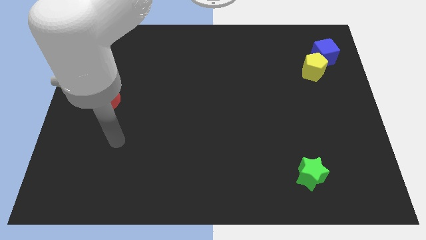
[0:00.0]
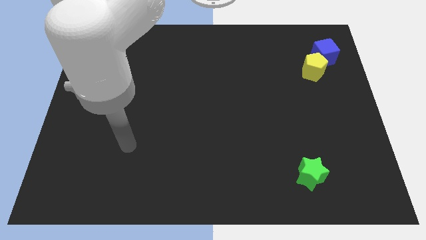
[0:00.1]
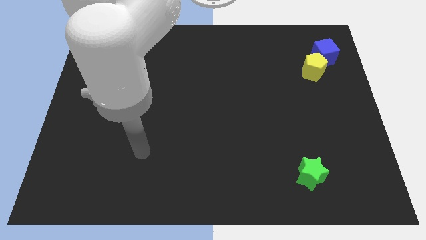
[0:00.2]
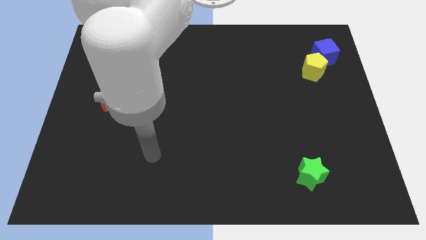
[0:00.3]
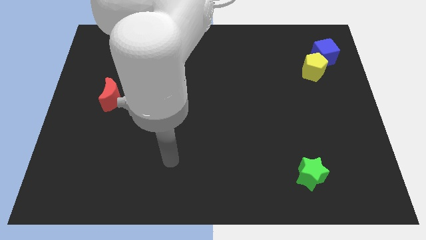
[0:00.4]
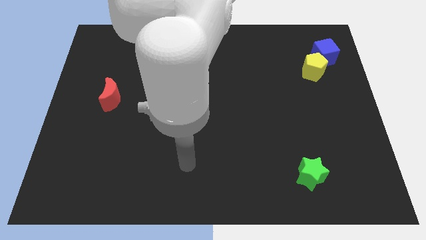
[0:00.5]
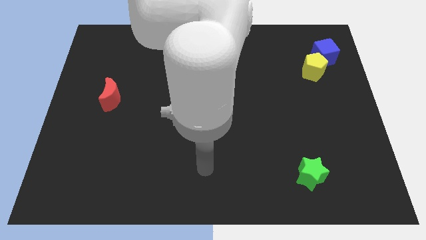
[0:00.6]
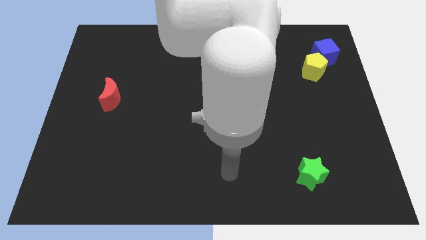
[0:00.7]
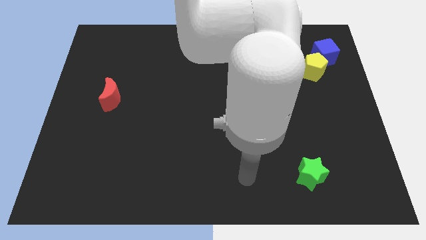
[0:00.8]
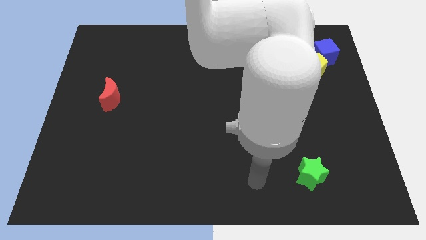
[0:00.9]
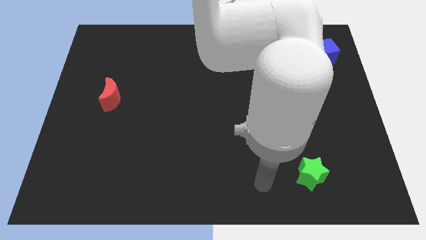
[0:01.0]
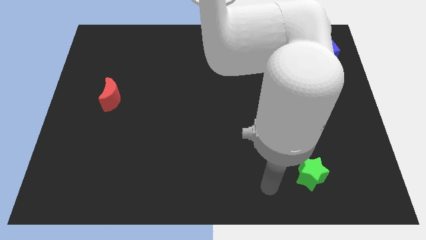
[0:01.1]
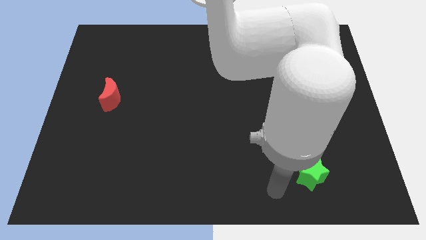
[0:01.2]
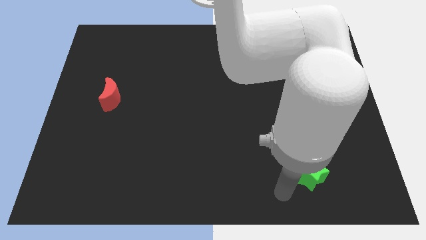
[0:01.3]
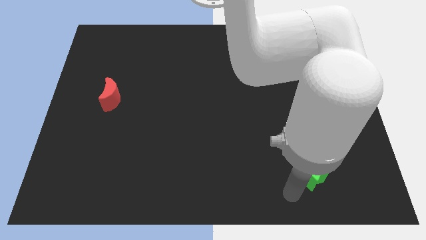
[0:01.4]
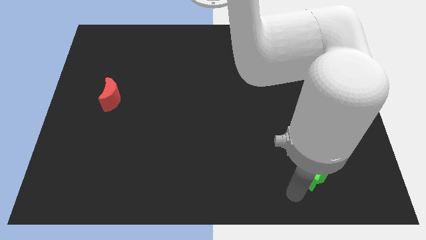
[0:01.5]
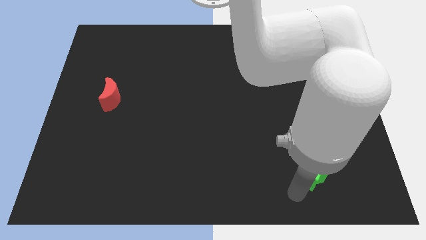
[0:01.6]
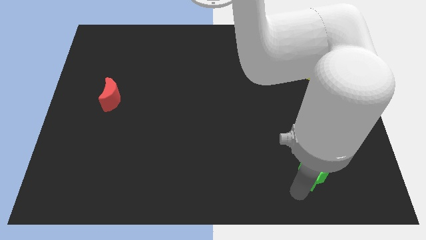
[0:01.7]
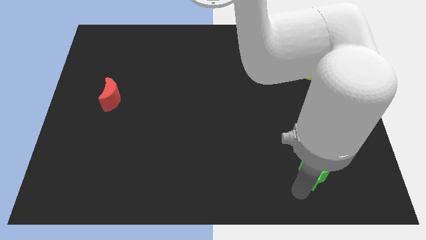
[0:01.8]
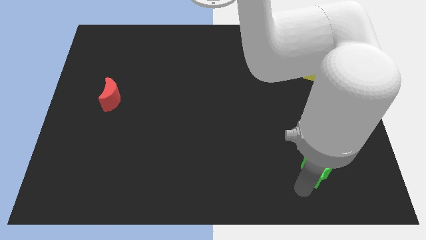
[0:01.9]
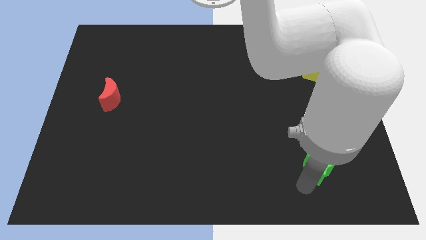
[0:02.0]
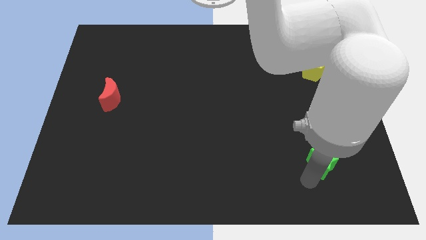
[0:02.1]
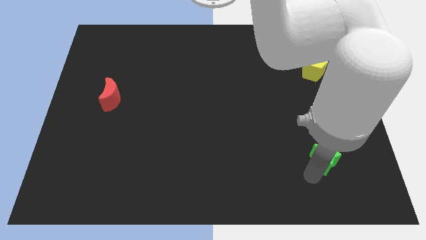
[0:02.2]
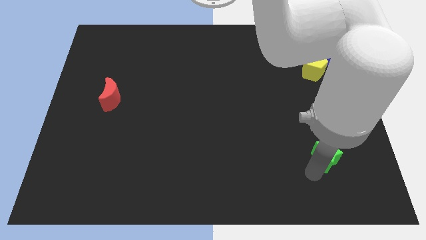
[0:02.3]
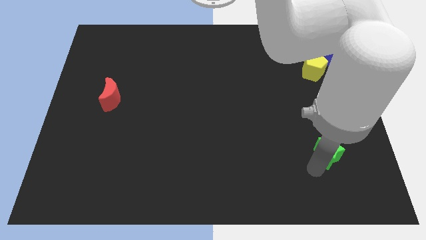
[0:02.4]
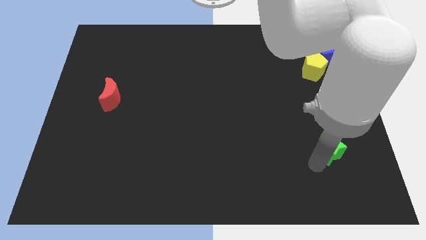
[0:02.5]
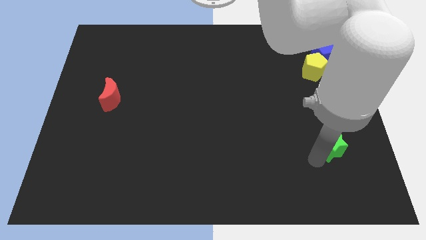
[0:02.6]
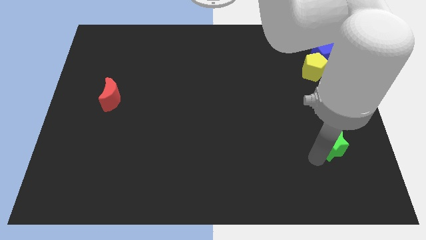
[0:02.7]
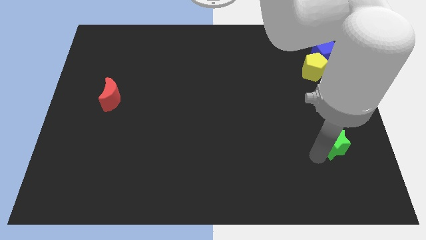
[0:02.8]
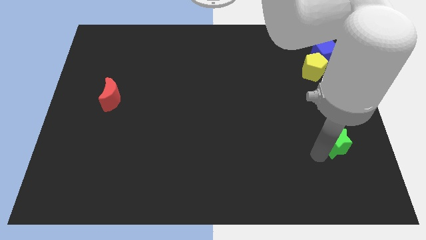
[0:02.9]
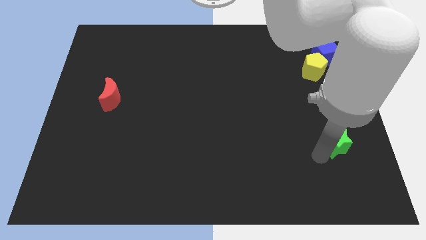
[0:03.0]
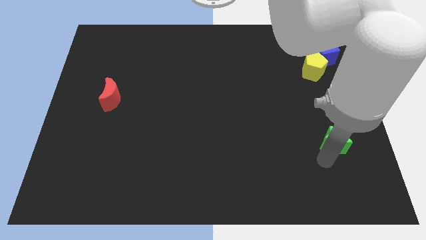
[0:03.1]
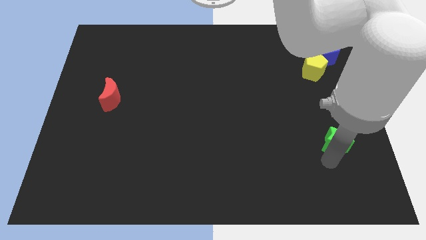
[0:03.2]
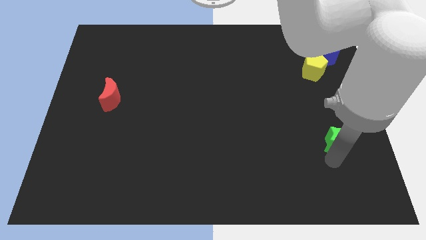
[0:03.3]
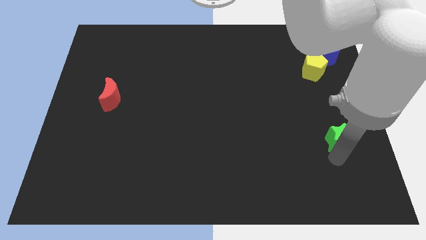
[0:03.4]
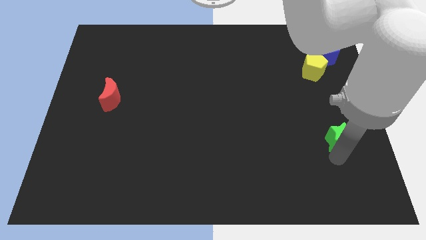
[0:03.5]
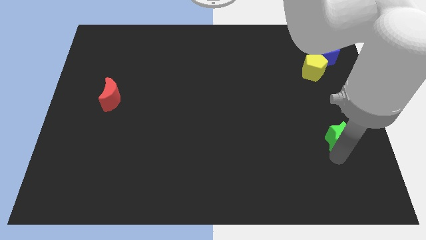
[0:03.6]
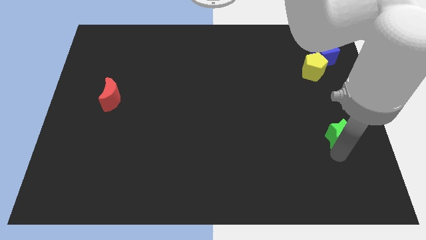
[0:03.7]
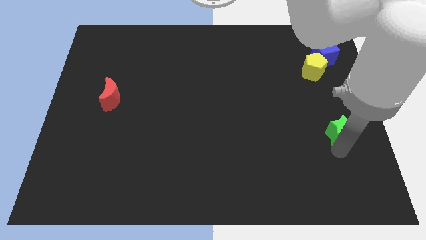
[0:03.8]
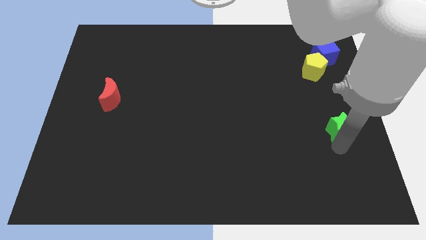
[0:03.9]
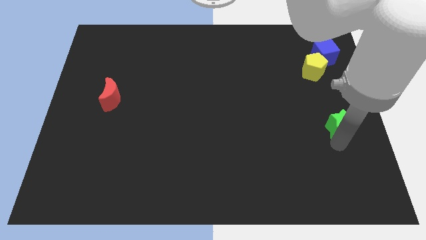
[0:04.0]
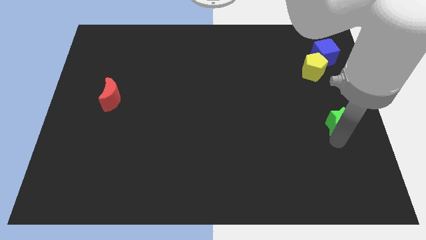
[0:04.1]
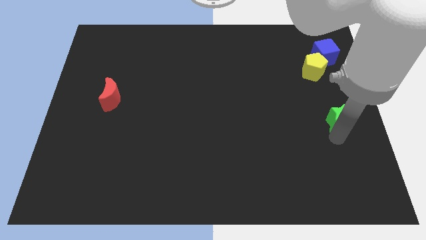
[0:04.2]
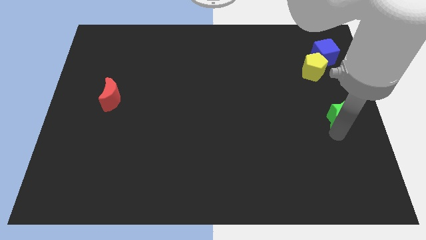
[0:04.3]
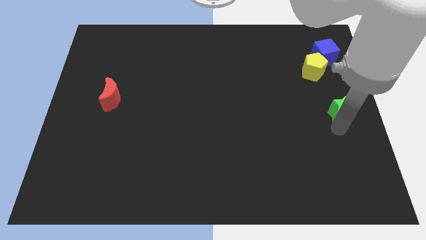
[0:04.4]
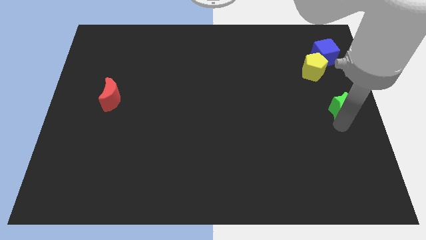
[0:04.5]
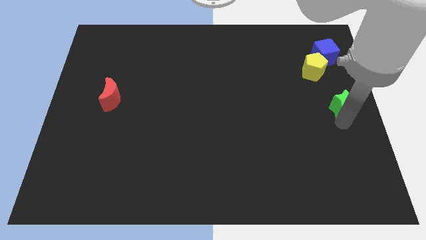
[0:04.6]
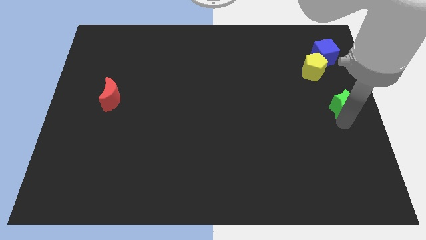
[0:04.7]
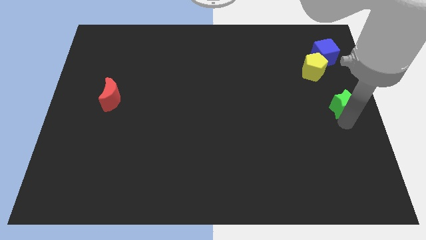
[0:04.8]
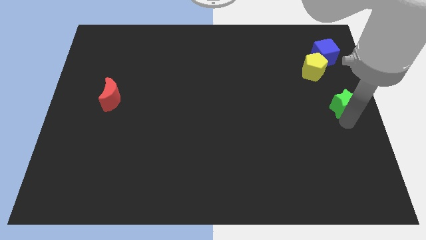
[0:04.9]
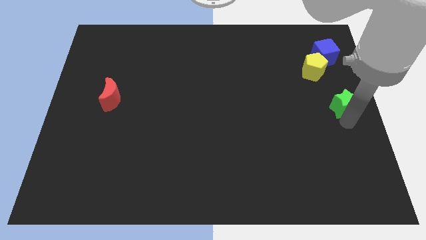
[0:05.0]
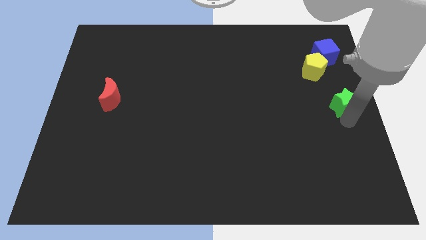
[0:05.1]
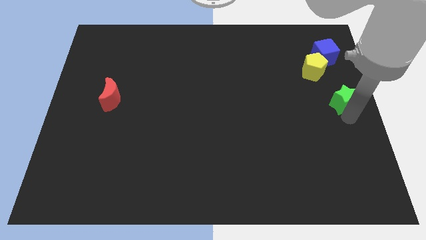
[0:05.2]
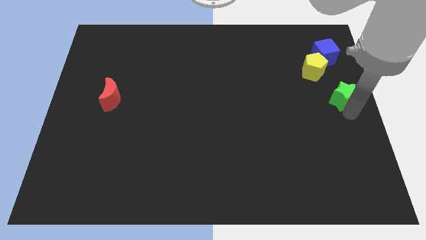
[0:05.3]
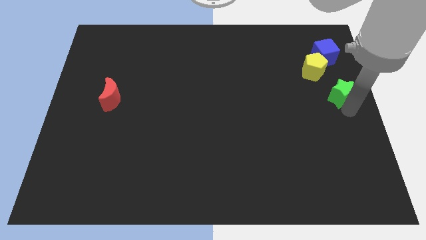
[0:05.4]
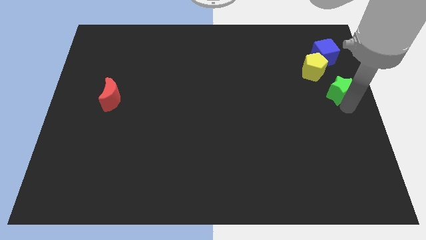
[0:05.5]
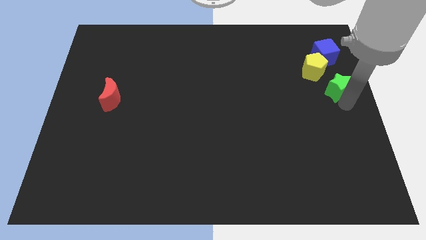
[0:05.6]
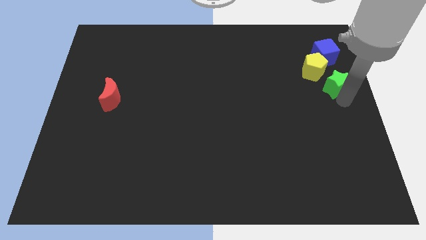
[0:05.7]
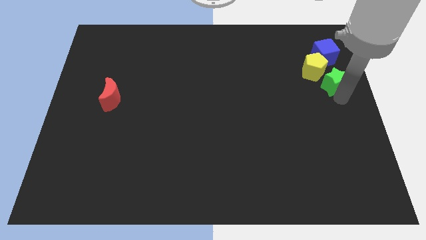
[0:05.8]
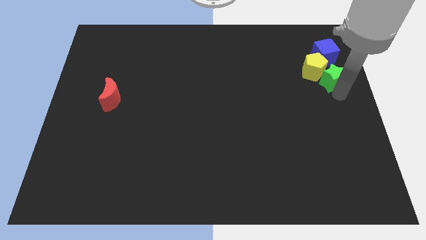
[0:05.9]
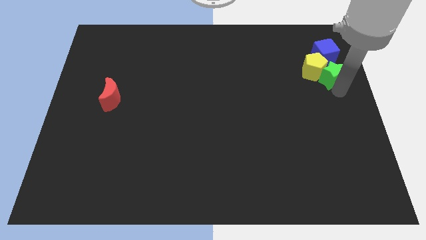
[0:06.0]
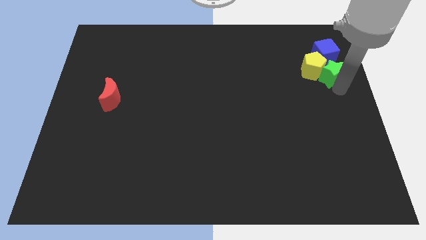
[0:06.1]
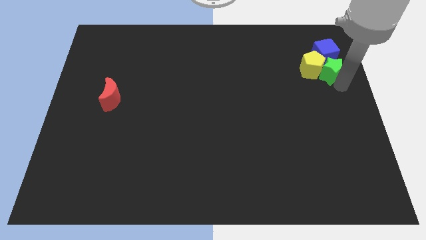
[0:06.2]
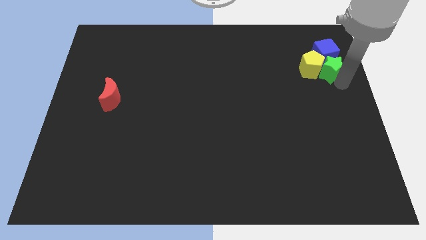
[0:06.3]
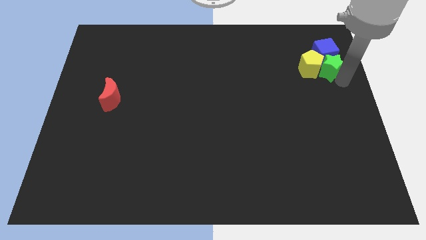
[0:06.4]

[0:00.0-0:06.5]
slide the star towards the blue cube

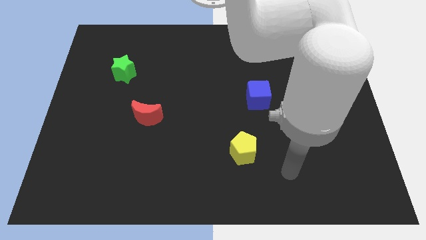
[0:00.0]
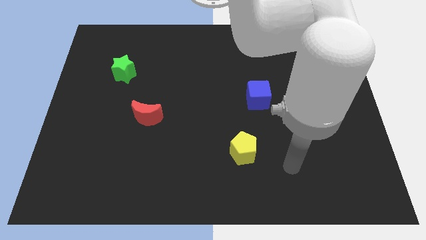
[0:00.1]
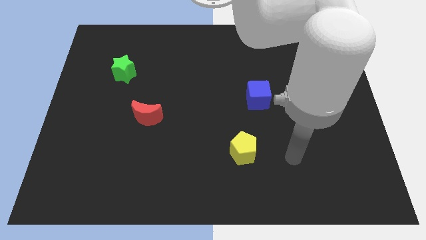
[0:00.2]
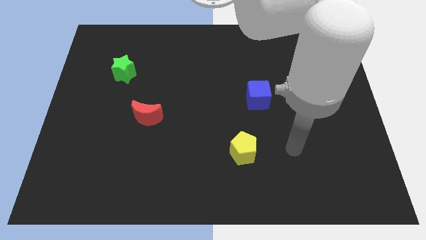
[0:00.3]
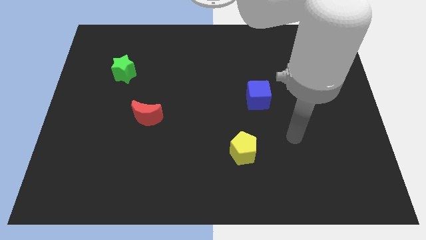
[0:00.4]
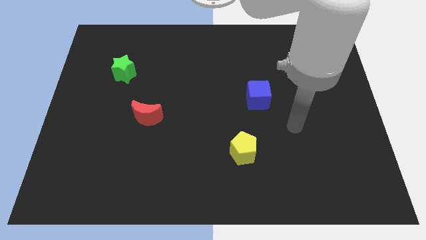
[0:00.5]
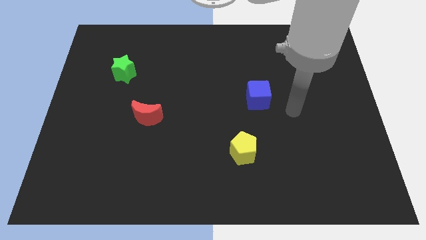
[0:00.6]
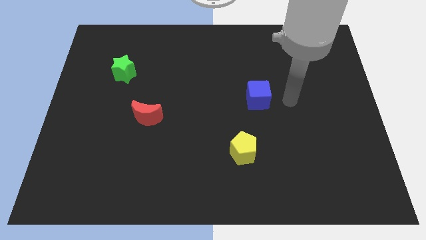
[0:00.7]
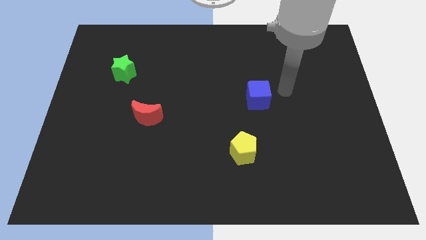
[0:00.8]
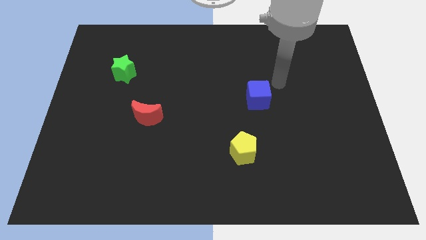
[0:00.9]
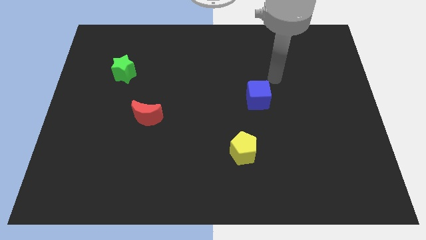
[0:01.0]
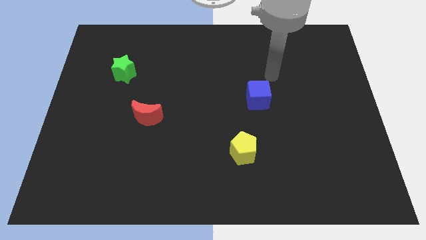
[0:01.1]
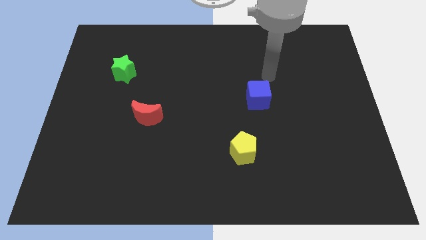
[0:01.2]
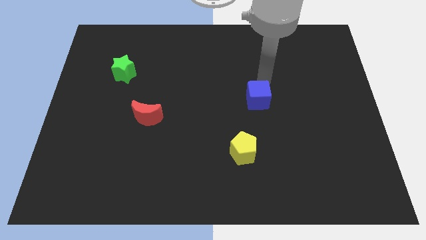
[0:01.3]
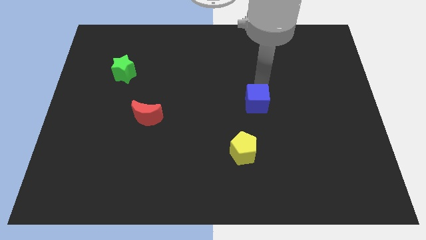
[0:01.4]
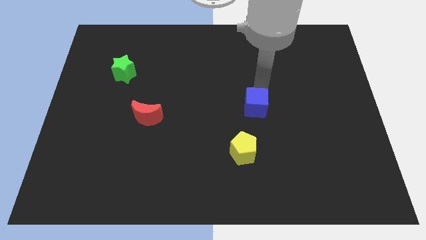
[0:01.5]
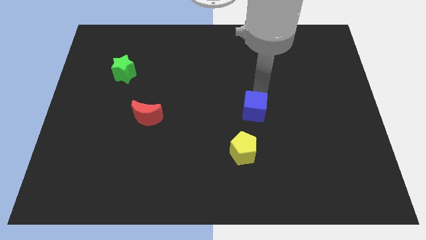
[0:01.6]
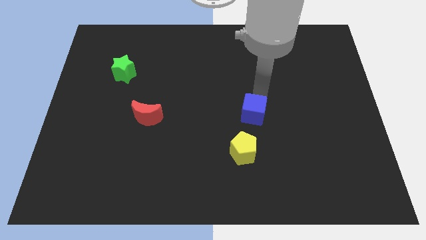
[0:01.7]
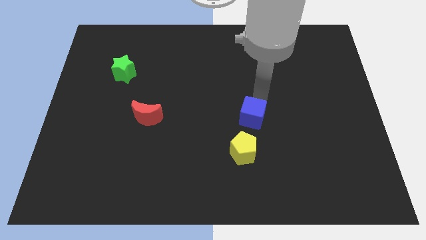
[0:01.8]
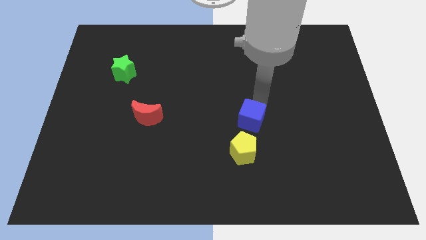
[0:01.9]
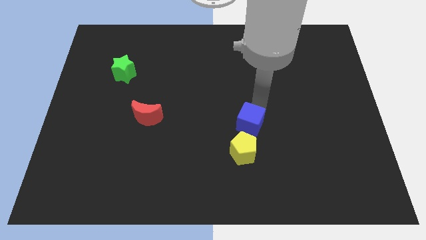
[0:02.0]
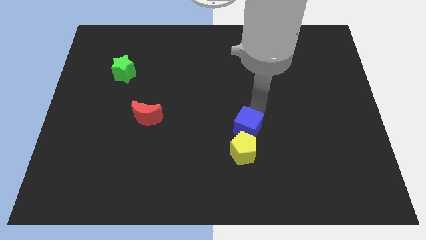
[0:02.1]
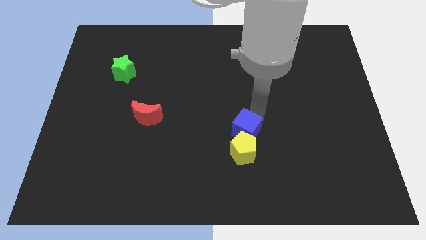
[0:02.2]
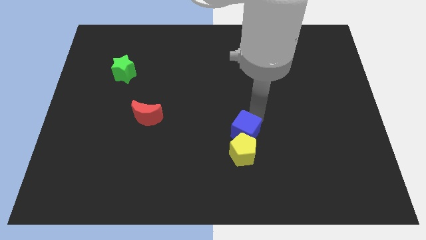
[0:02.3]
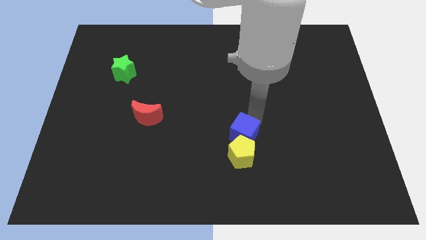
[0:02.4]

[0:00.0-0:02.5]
move the blue cube next to the pentagon
